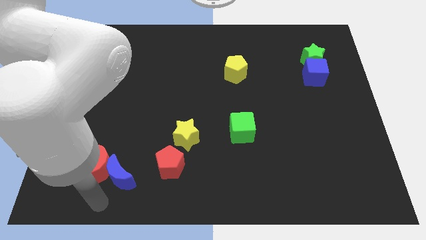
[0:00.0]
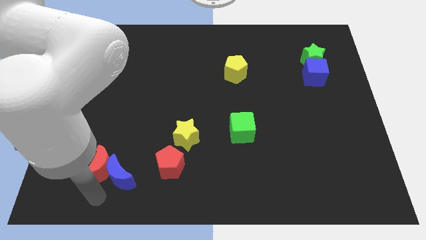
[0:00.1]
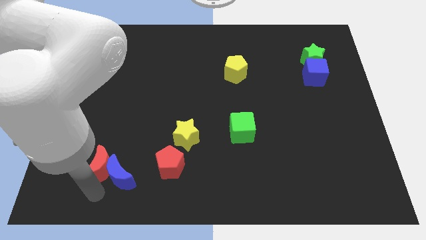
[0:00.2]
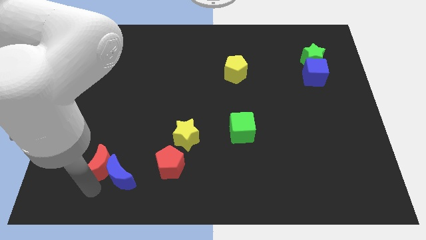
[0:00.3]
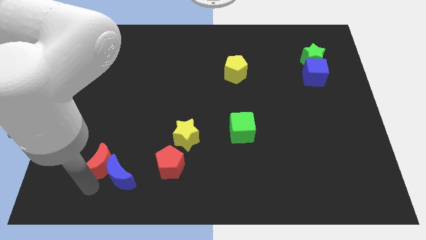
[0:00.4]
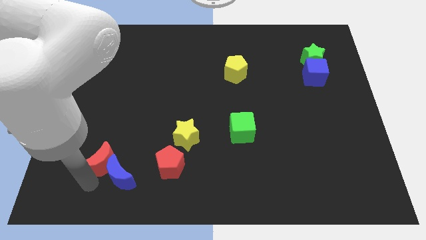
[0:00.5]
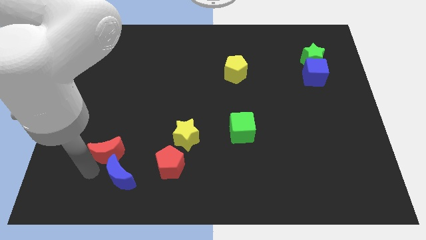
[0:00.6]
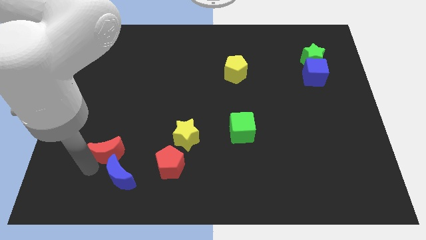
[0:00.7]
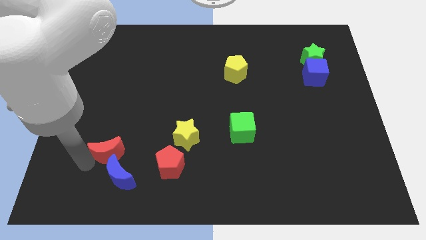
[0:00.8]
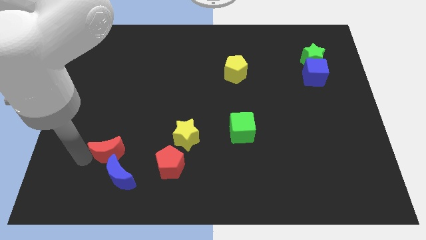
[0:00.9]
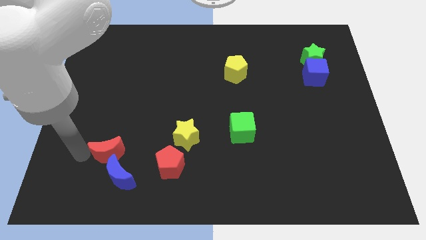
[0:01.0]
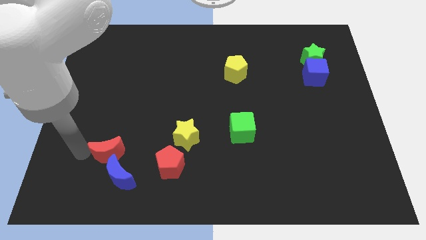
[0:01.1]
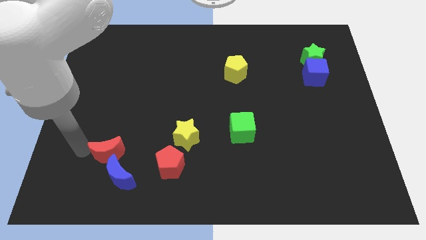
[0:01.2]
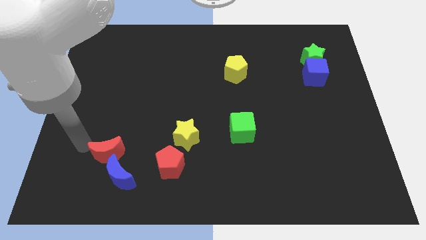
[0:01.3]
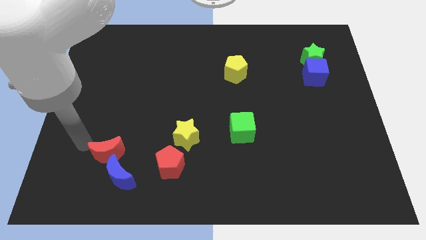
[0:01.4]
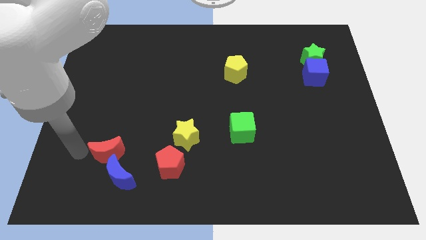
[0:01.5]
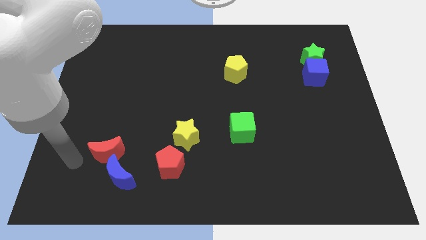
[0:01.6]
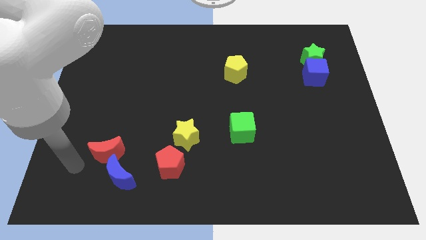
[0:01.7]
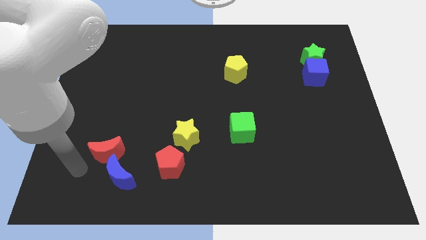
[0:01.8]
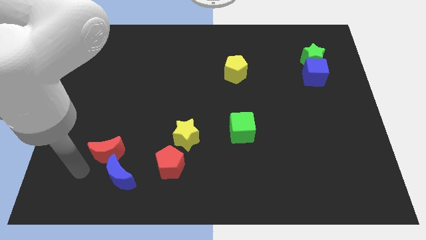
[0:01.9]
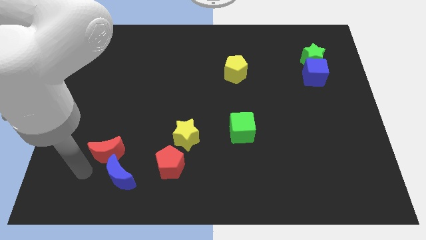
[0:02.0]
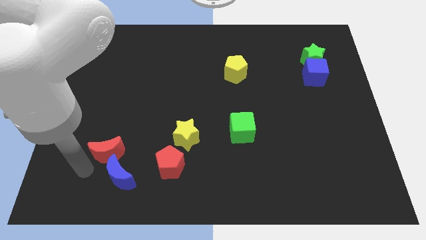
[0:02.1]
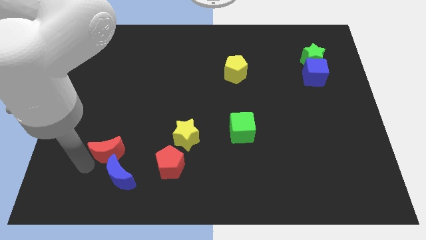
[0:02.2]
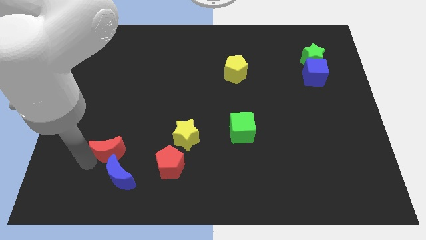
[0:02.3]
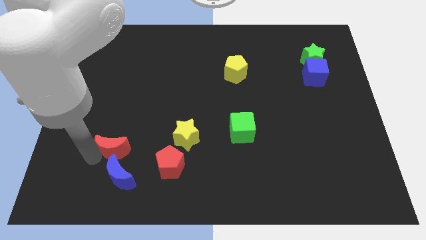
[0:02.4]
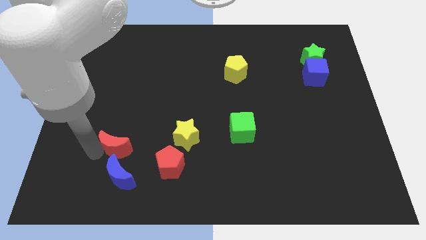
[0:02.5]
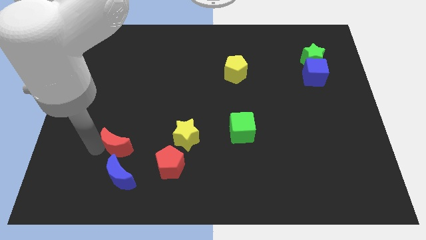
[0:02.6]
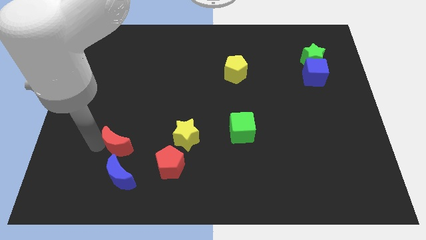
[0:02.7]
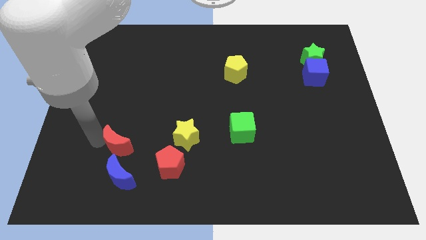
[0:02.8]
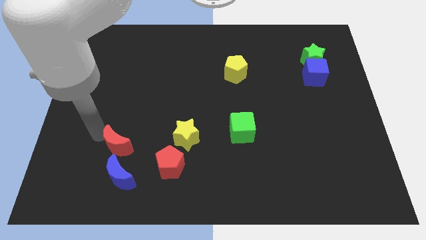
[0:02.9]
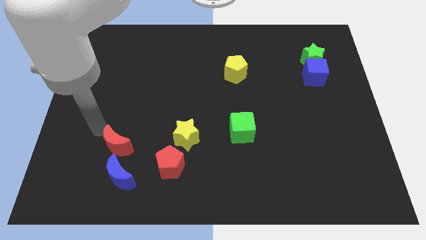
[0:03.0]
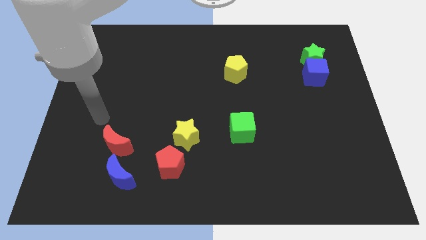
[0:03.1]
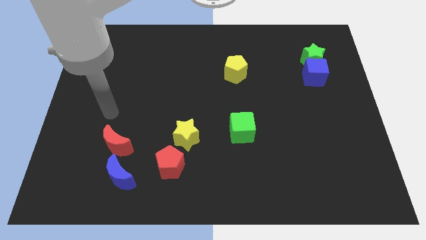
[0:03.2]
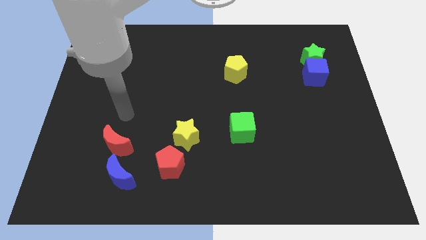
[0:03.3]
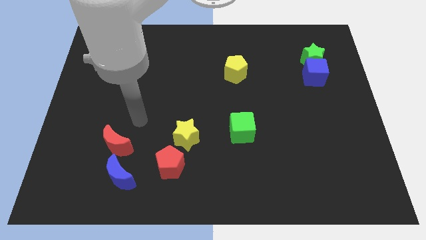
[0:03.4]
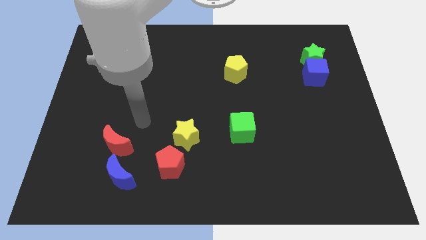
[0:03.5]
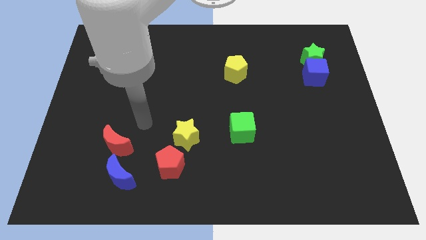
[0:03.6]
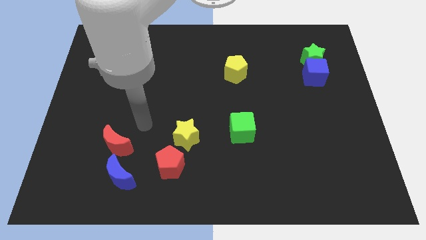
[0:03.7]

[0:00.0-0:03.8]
put the red crescent to the left of the yellow star

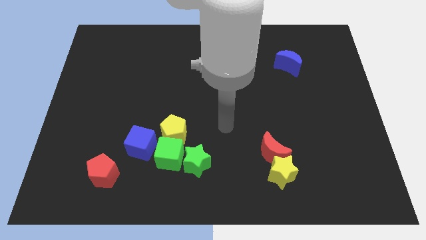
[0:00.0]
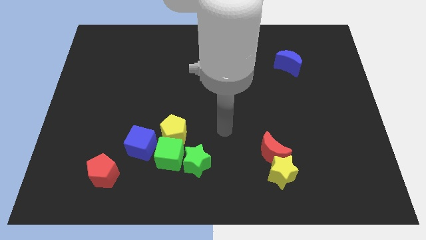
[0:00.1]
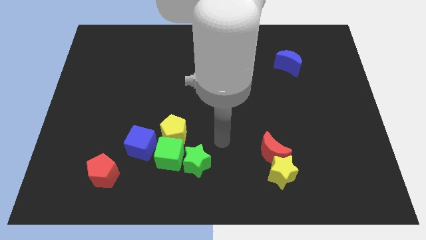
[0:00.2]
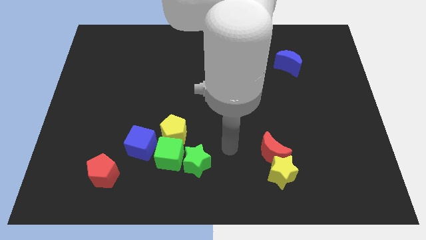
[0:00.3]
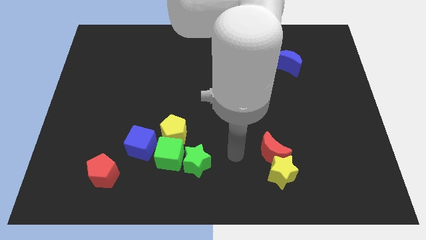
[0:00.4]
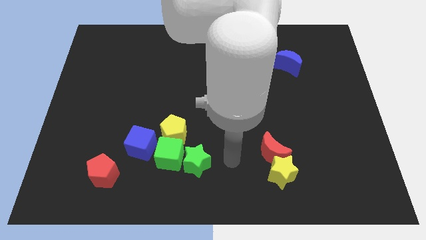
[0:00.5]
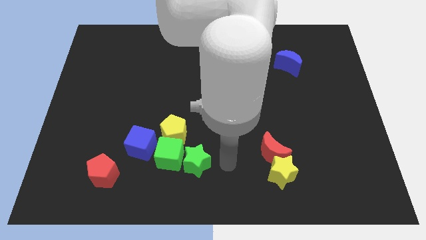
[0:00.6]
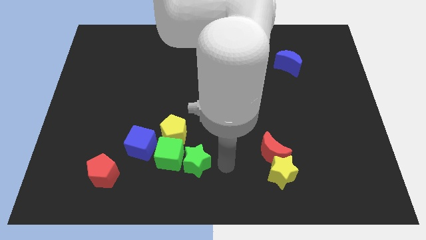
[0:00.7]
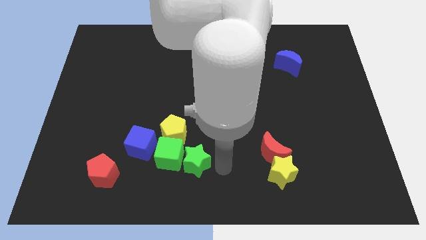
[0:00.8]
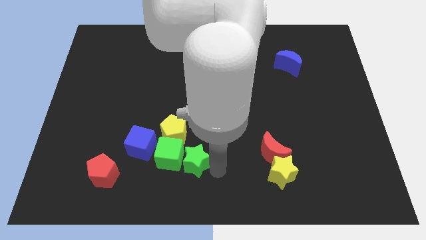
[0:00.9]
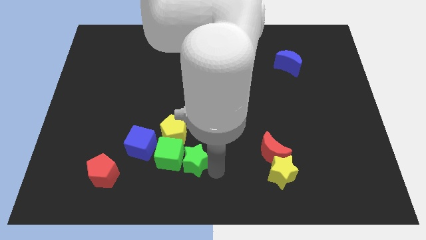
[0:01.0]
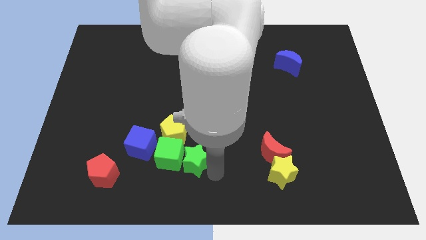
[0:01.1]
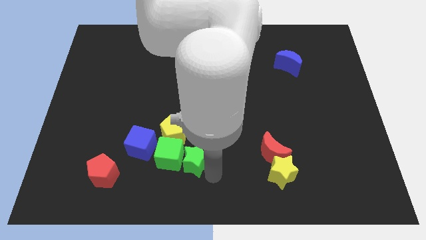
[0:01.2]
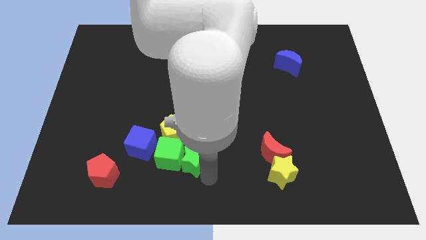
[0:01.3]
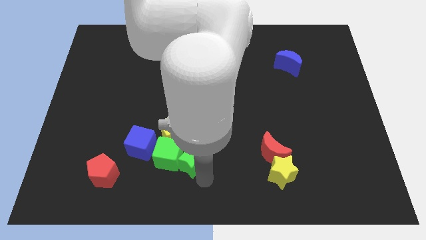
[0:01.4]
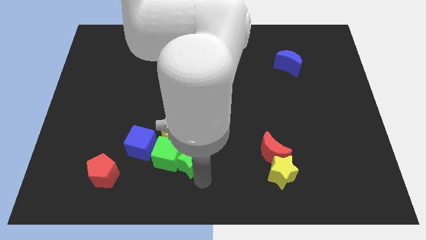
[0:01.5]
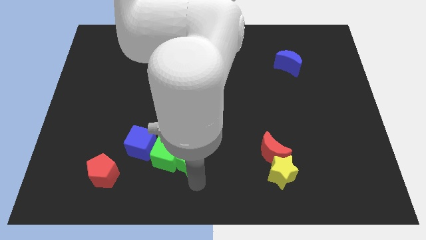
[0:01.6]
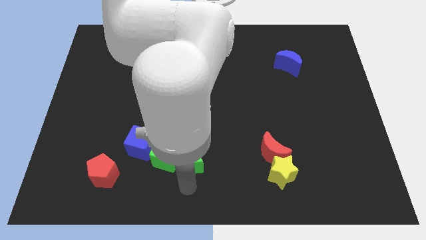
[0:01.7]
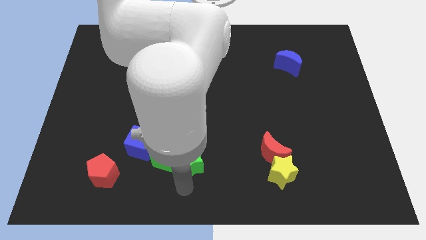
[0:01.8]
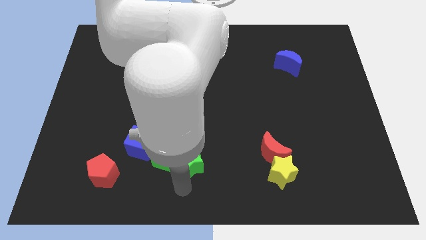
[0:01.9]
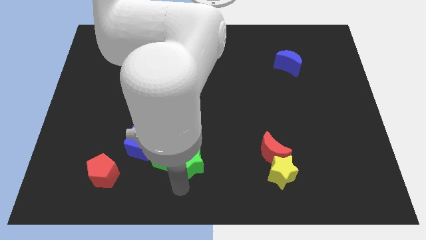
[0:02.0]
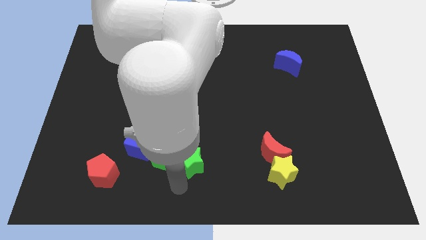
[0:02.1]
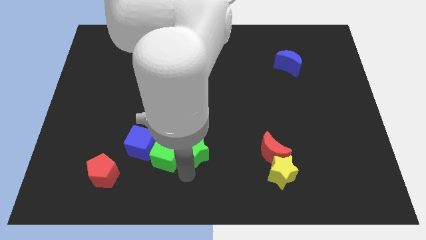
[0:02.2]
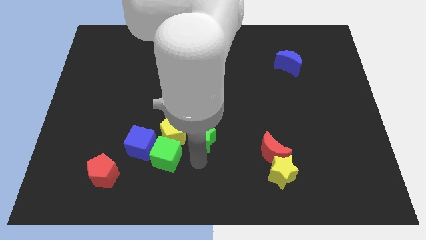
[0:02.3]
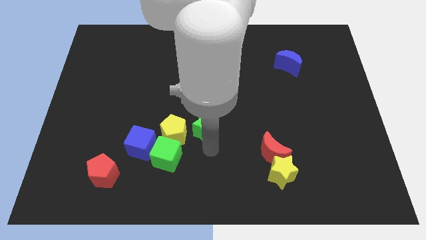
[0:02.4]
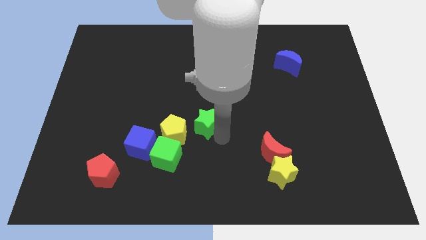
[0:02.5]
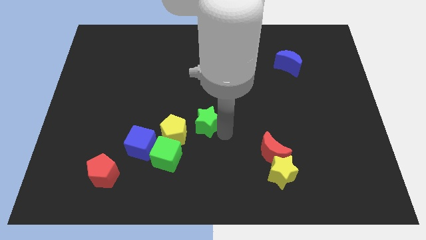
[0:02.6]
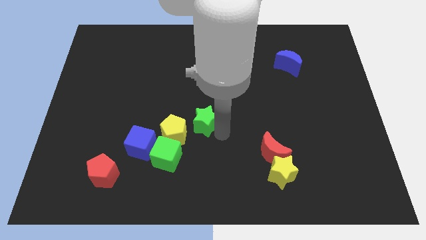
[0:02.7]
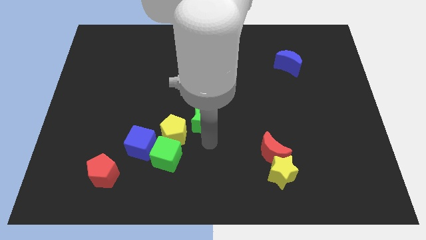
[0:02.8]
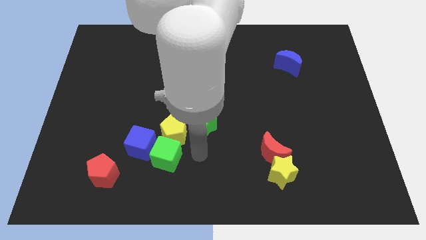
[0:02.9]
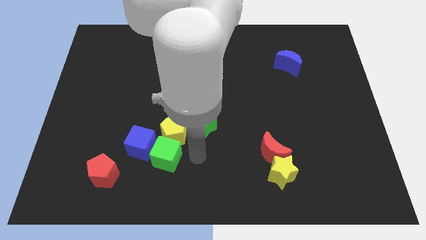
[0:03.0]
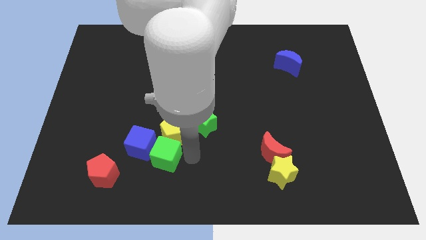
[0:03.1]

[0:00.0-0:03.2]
move the green star to the top right of the yellow pentagon

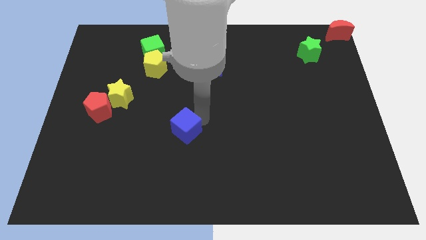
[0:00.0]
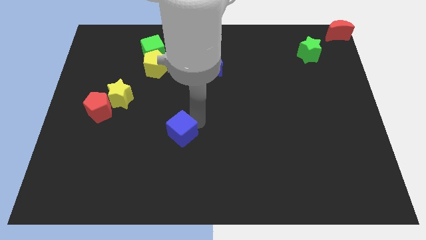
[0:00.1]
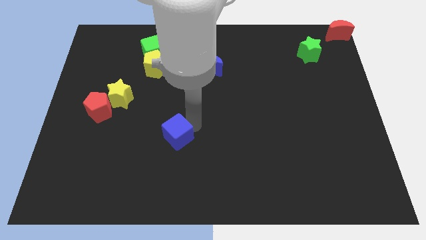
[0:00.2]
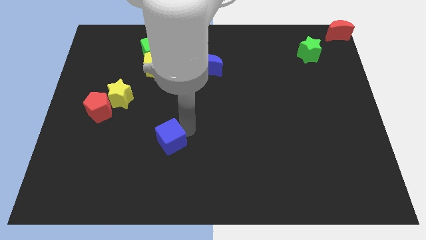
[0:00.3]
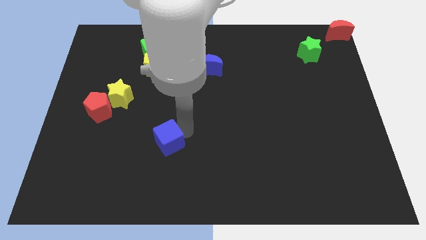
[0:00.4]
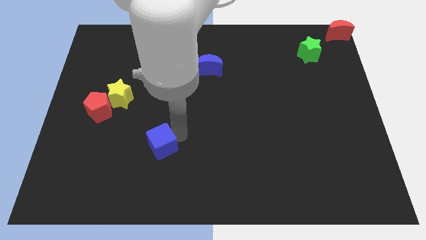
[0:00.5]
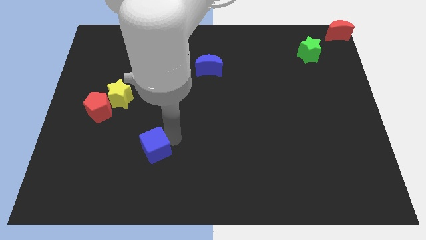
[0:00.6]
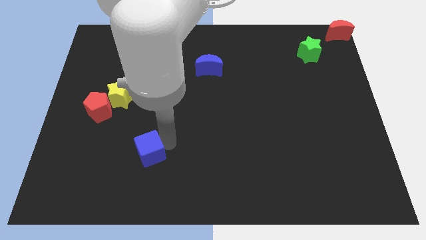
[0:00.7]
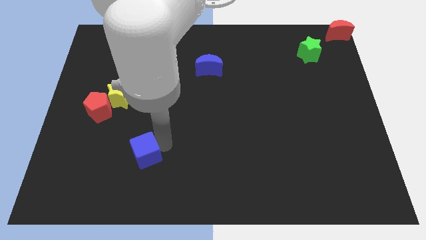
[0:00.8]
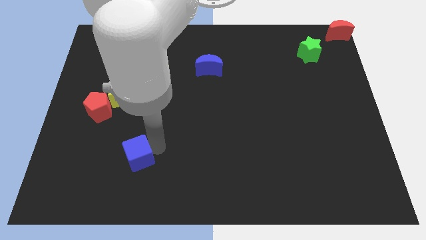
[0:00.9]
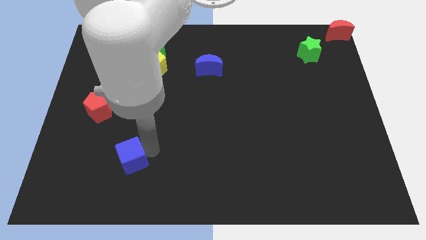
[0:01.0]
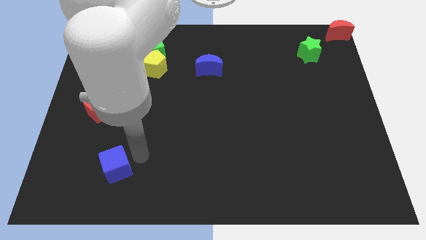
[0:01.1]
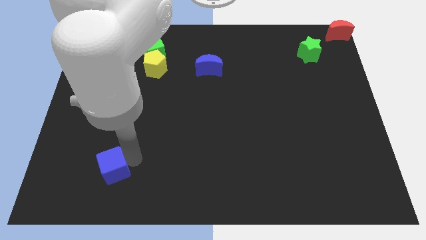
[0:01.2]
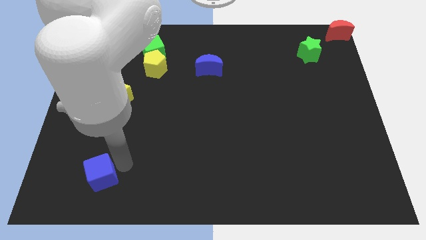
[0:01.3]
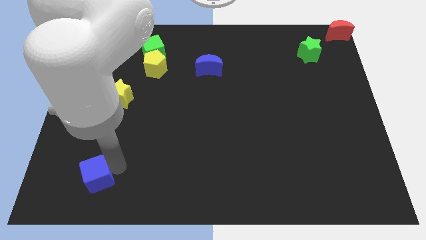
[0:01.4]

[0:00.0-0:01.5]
push the blue cube below the red pentagon

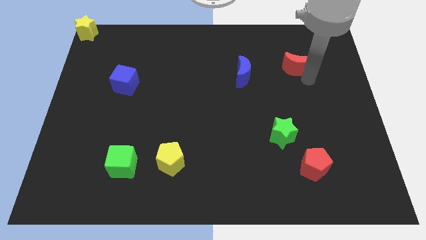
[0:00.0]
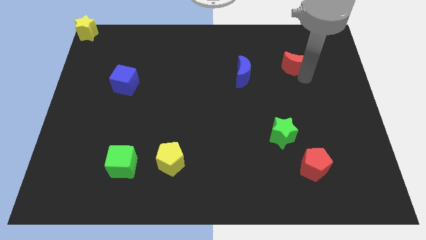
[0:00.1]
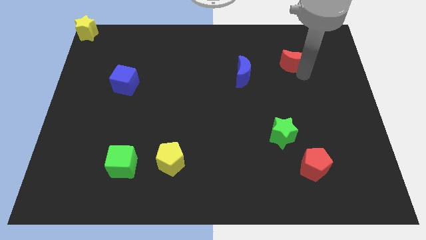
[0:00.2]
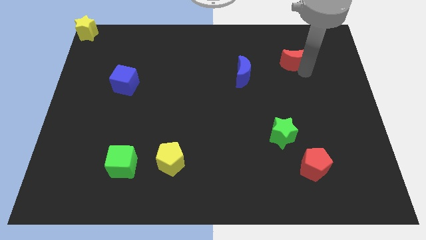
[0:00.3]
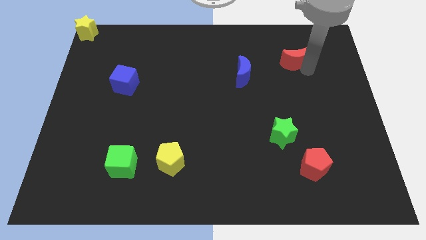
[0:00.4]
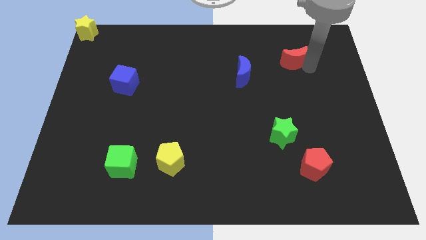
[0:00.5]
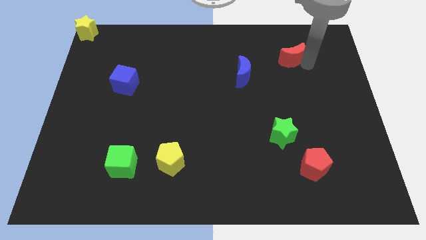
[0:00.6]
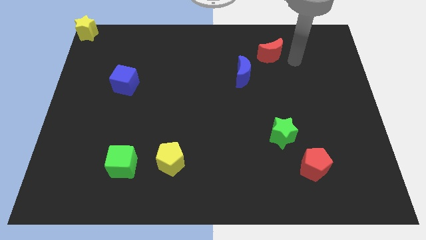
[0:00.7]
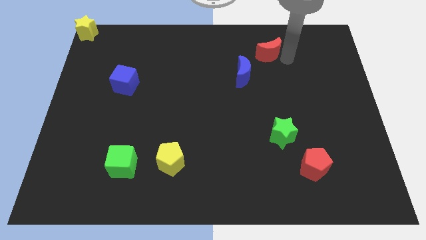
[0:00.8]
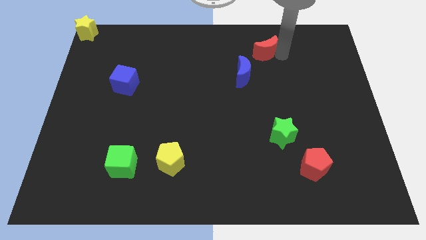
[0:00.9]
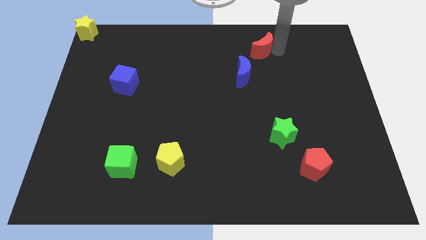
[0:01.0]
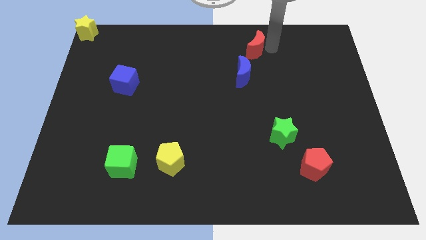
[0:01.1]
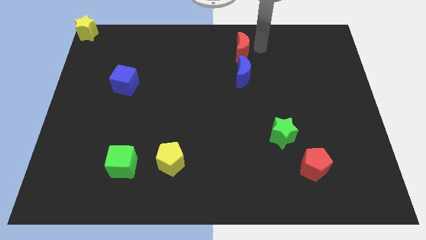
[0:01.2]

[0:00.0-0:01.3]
place the red crescent above the blue crescent
